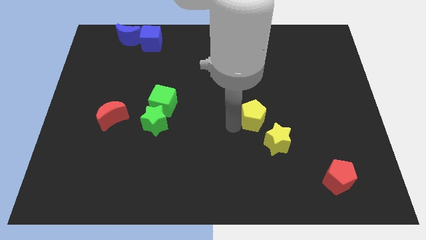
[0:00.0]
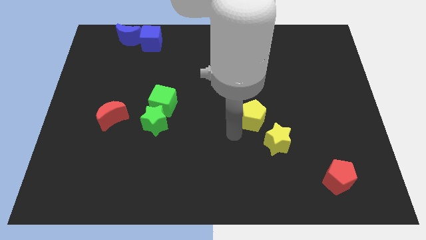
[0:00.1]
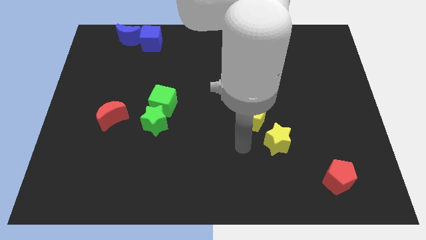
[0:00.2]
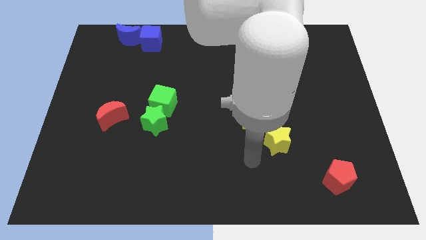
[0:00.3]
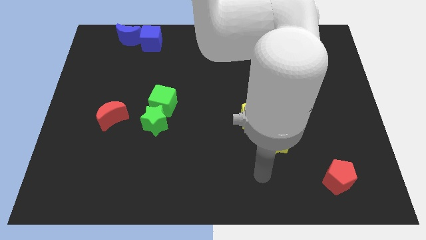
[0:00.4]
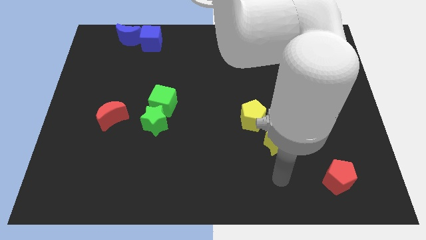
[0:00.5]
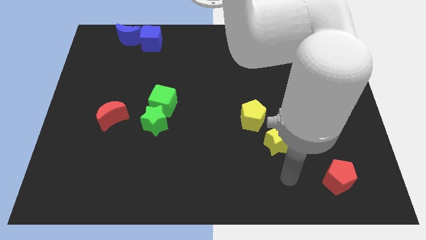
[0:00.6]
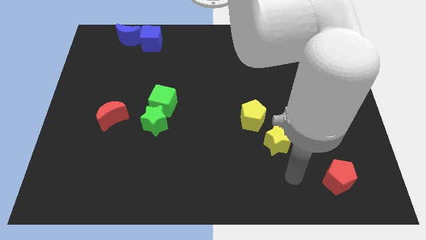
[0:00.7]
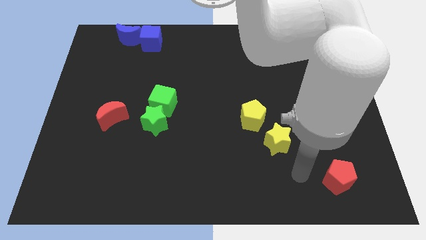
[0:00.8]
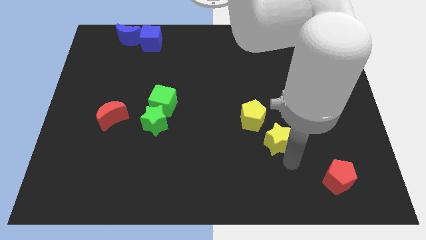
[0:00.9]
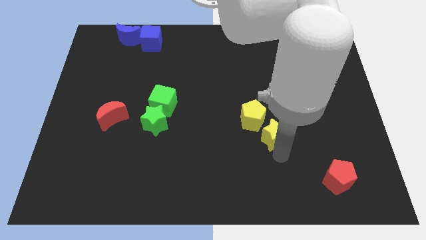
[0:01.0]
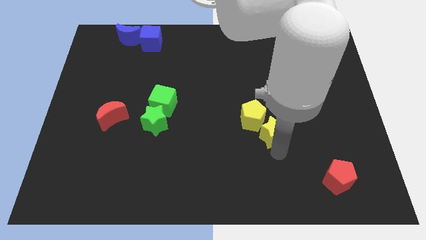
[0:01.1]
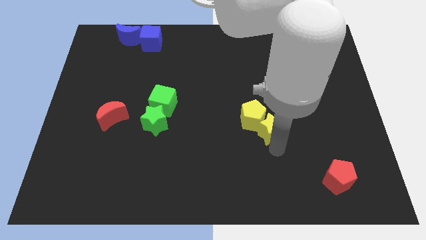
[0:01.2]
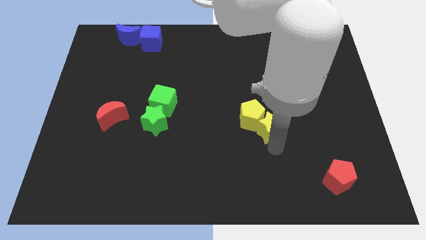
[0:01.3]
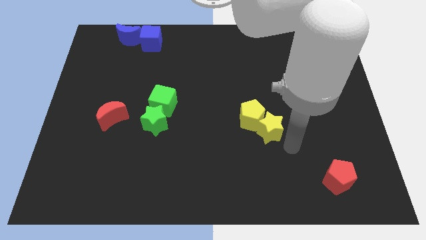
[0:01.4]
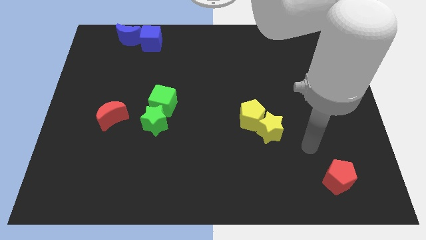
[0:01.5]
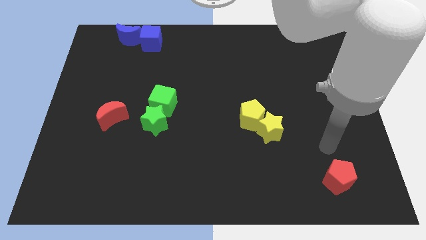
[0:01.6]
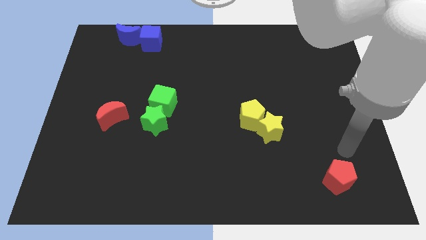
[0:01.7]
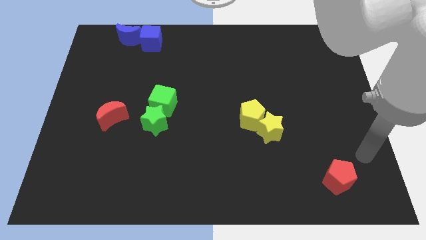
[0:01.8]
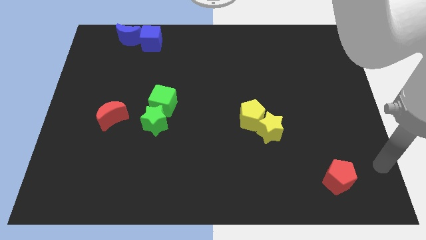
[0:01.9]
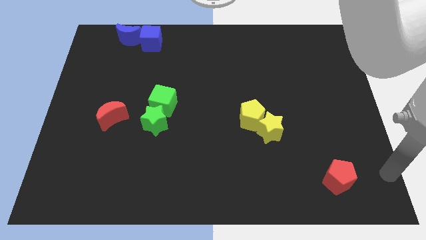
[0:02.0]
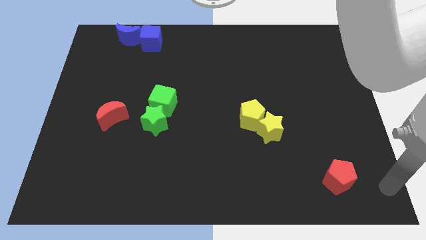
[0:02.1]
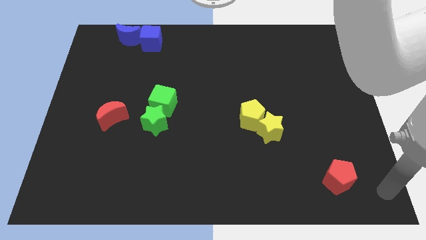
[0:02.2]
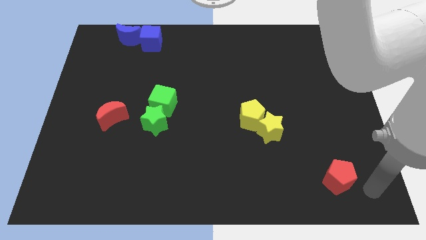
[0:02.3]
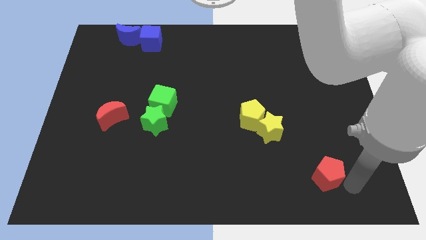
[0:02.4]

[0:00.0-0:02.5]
move the arm near to the red pentagon

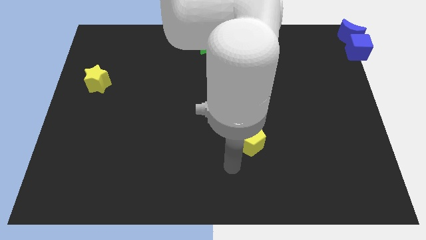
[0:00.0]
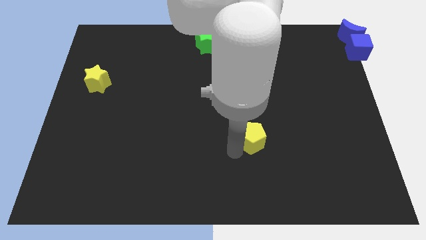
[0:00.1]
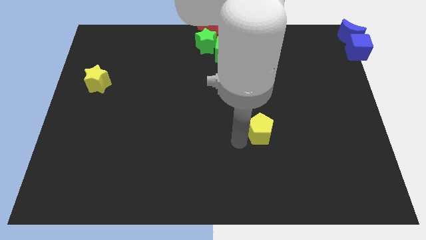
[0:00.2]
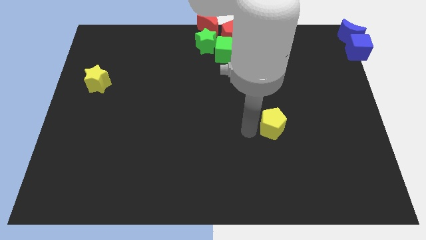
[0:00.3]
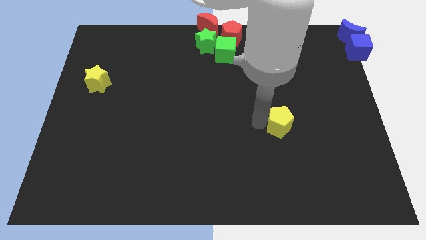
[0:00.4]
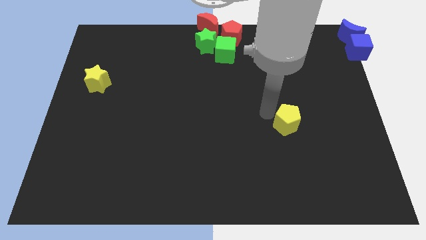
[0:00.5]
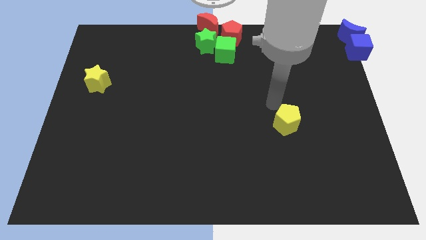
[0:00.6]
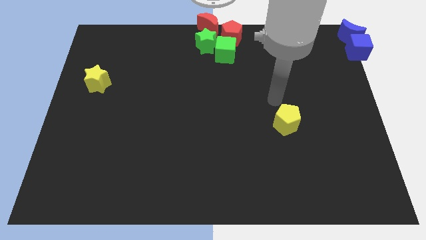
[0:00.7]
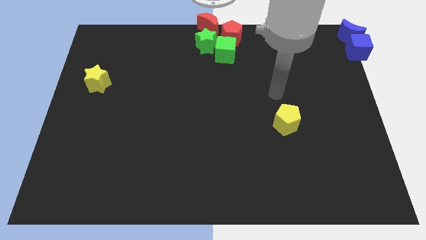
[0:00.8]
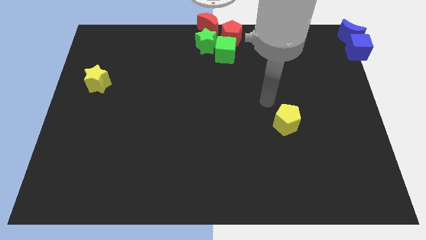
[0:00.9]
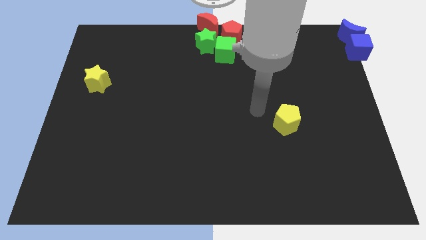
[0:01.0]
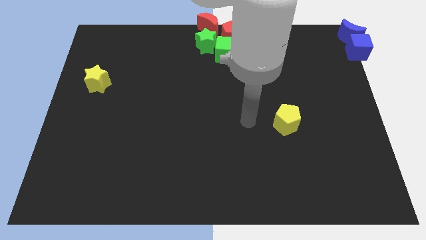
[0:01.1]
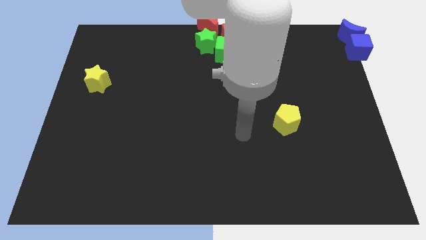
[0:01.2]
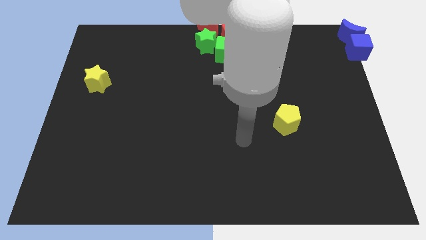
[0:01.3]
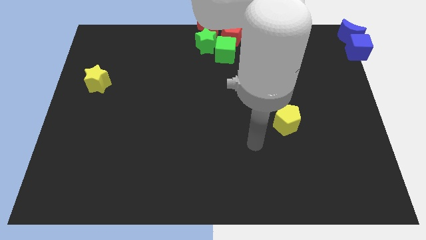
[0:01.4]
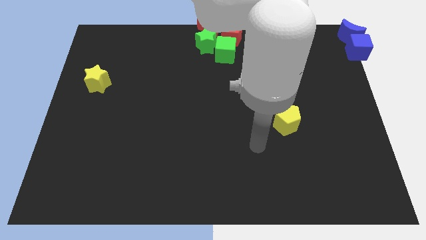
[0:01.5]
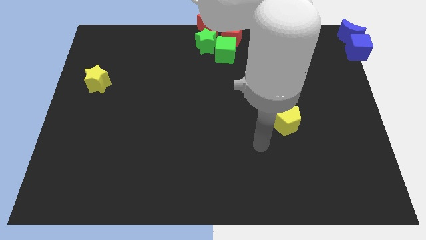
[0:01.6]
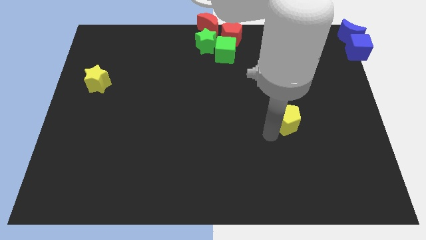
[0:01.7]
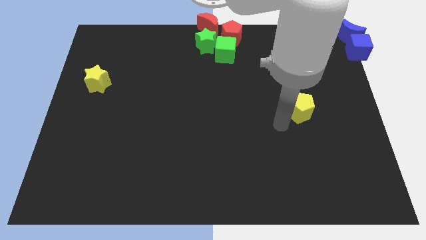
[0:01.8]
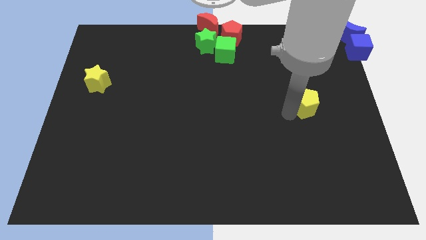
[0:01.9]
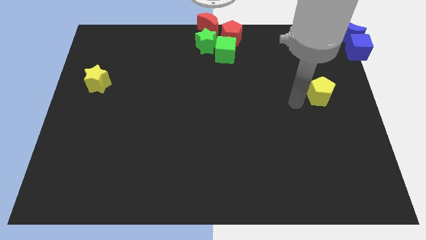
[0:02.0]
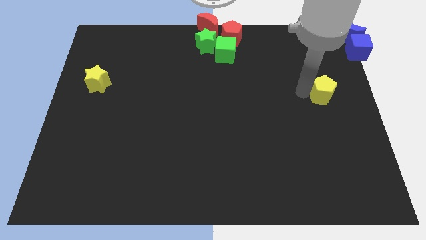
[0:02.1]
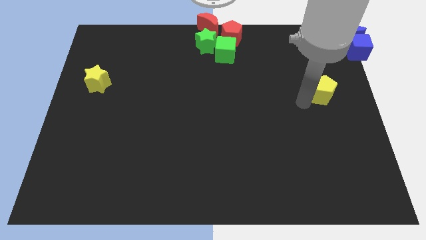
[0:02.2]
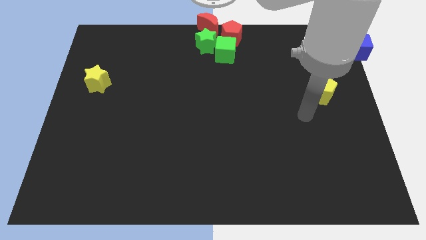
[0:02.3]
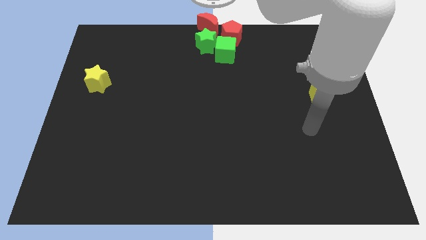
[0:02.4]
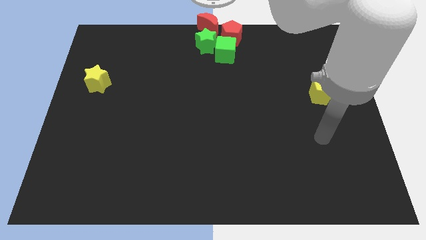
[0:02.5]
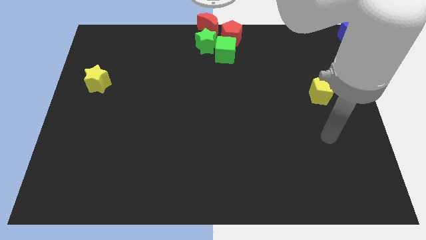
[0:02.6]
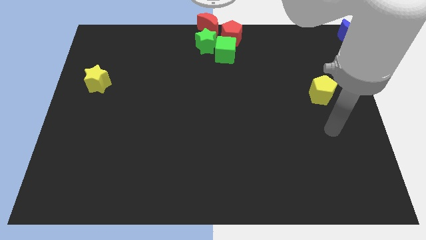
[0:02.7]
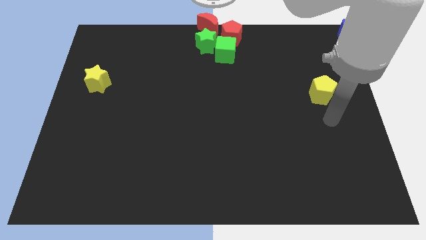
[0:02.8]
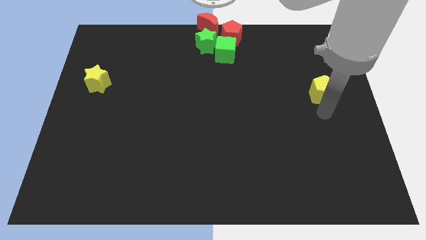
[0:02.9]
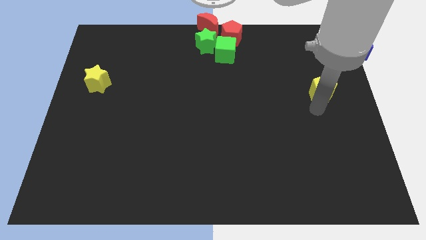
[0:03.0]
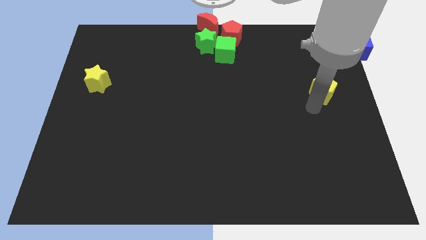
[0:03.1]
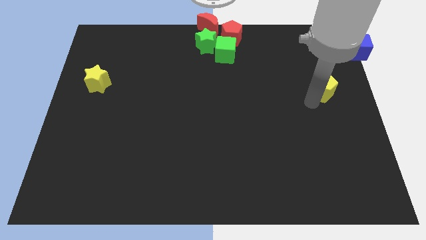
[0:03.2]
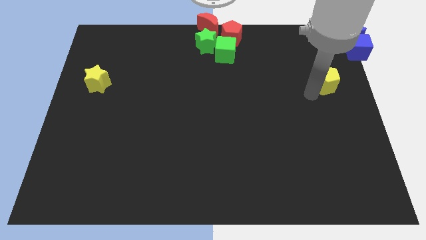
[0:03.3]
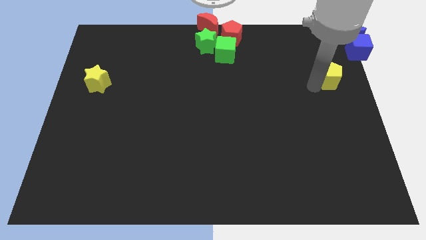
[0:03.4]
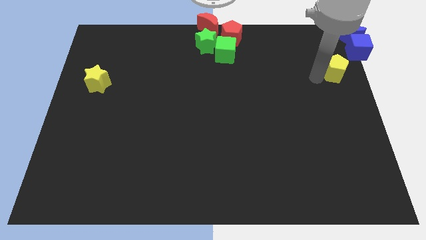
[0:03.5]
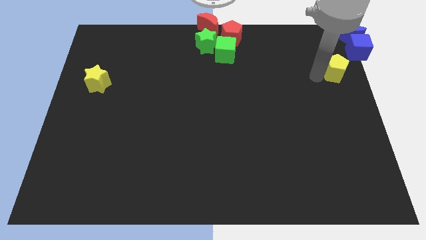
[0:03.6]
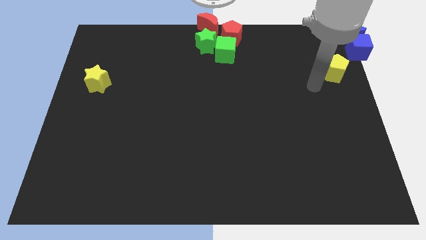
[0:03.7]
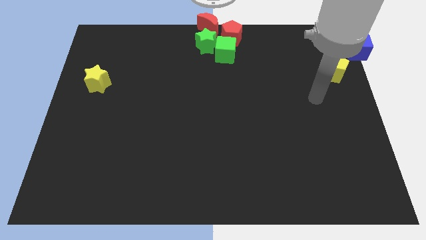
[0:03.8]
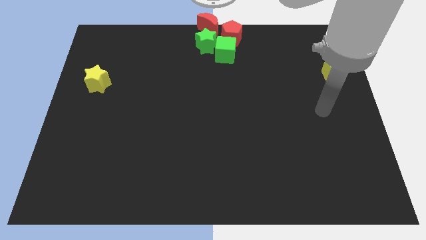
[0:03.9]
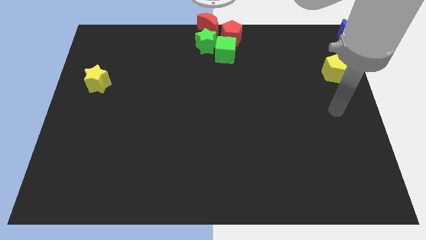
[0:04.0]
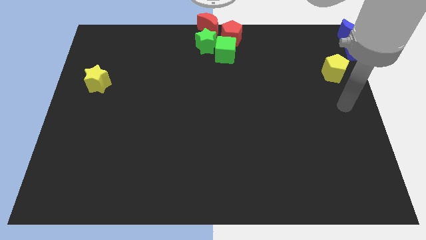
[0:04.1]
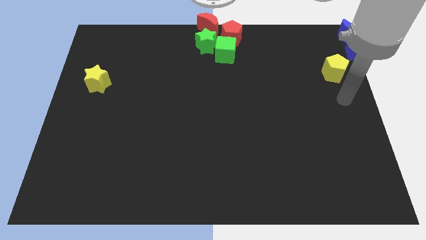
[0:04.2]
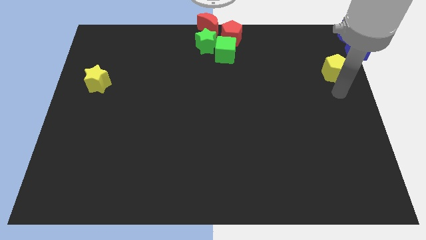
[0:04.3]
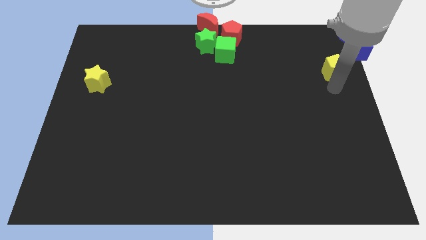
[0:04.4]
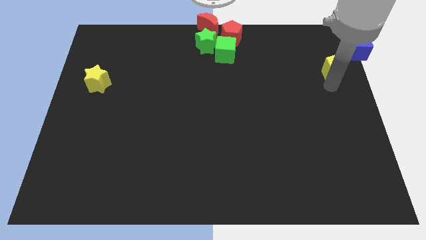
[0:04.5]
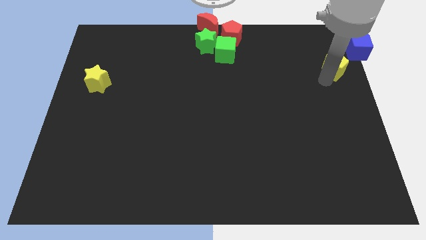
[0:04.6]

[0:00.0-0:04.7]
move the yellow pentagon towards top

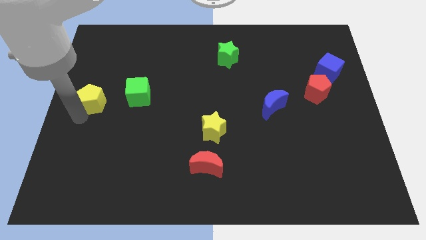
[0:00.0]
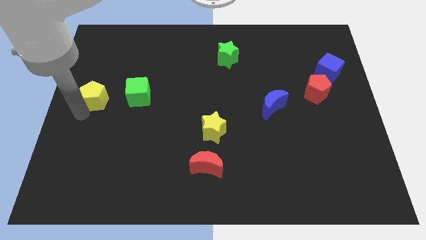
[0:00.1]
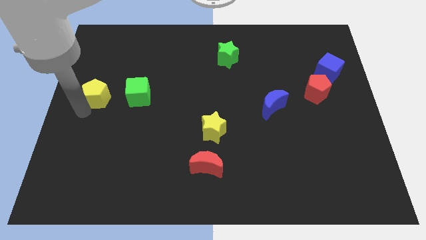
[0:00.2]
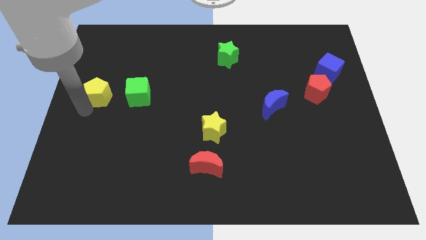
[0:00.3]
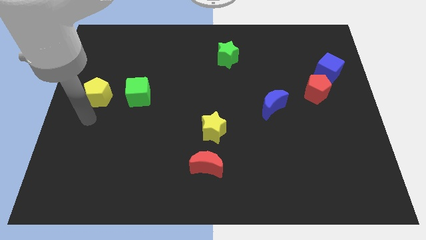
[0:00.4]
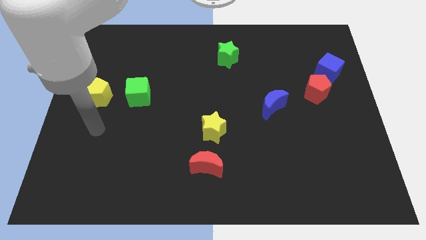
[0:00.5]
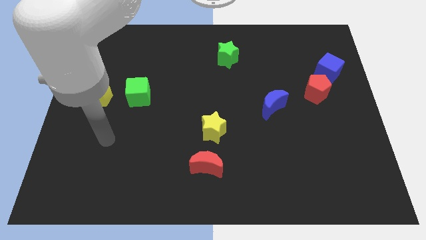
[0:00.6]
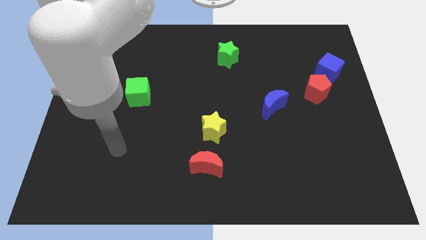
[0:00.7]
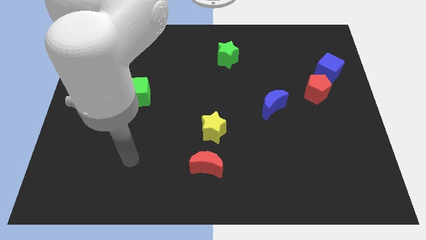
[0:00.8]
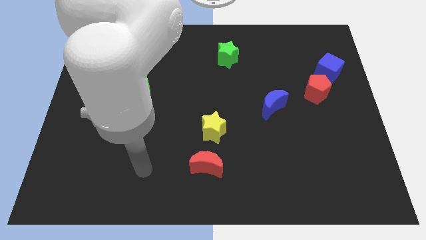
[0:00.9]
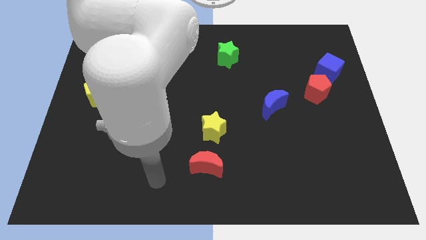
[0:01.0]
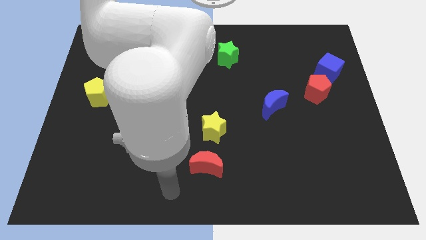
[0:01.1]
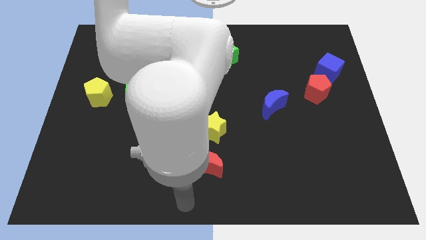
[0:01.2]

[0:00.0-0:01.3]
move your arm away from the yellow pentagon

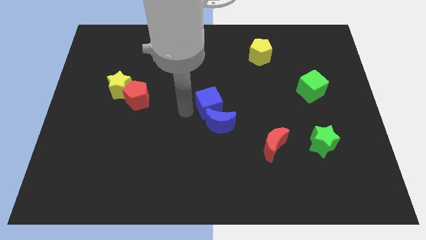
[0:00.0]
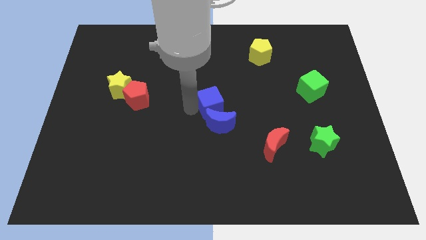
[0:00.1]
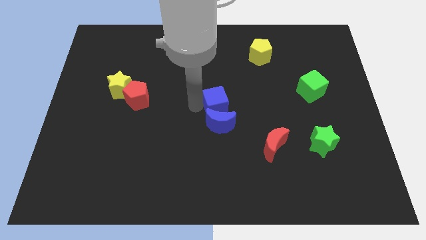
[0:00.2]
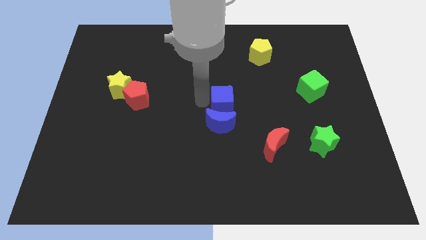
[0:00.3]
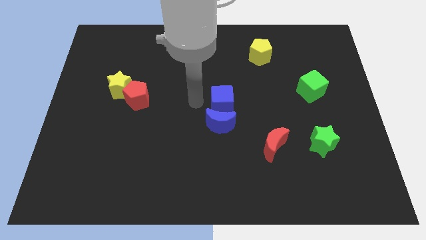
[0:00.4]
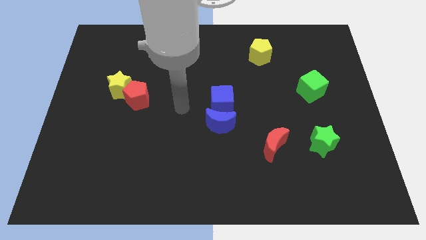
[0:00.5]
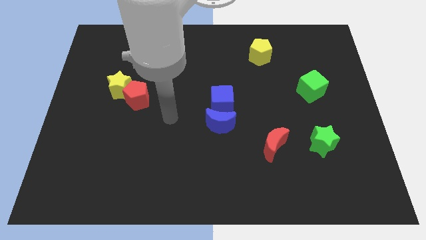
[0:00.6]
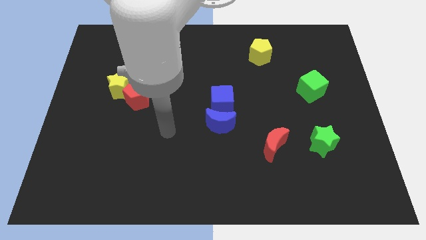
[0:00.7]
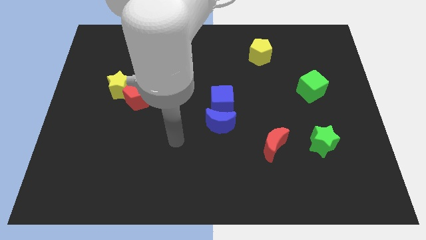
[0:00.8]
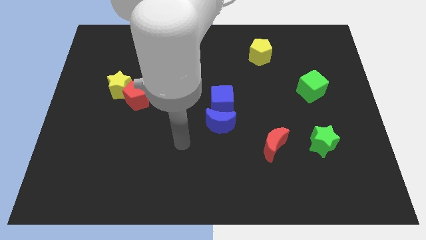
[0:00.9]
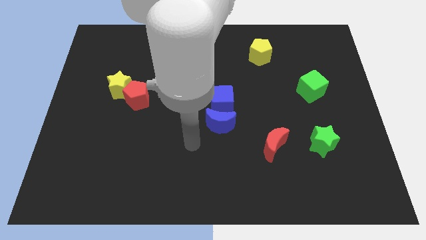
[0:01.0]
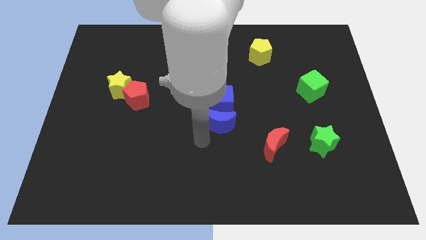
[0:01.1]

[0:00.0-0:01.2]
place blue cube on the top of the blue crescent
